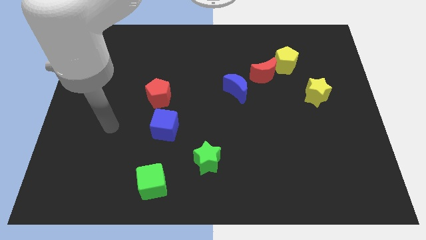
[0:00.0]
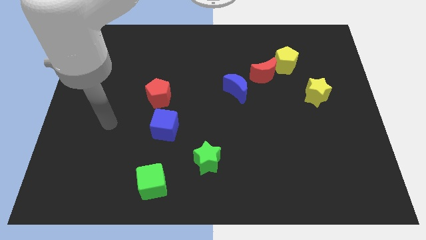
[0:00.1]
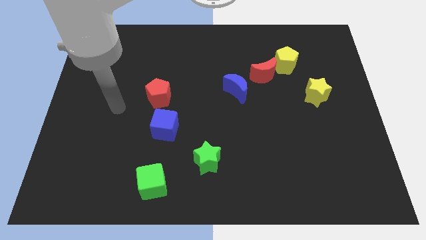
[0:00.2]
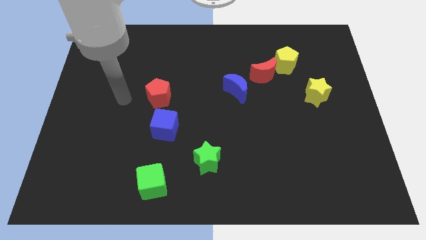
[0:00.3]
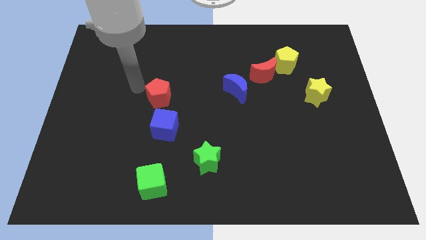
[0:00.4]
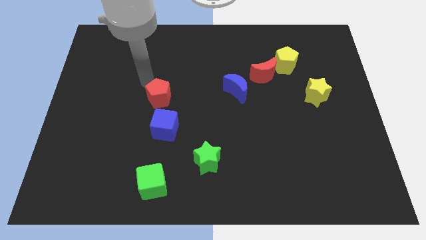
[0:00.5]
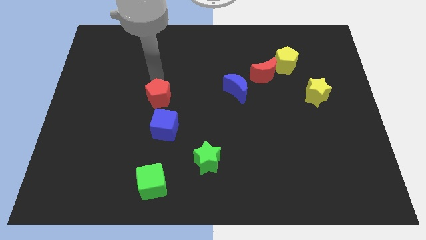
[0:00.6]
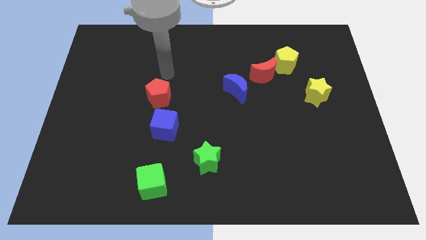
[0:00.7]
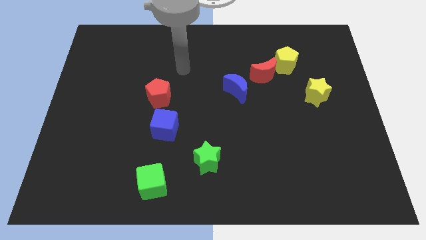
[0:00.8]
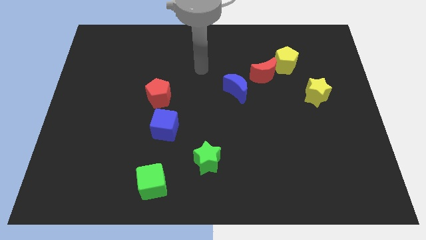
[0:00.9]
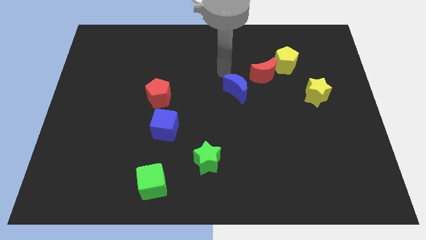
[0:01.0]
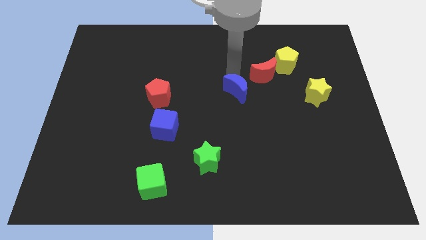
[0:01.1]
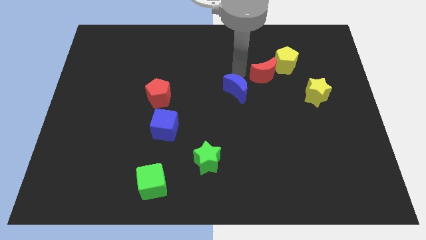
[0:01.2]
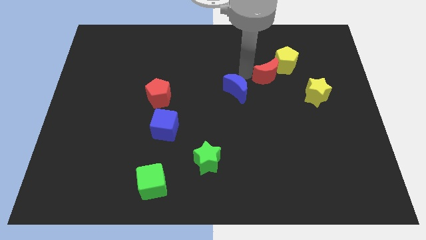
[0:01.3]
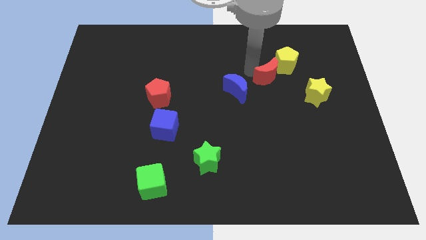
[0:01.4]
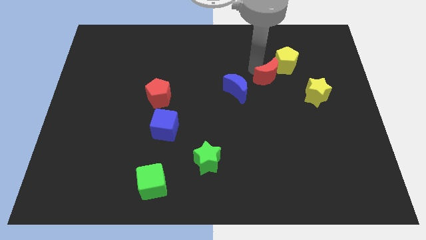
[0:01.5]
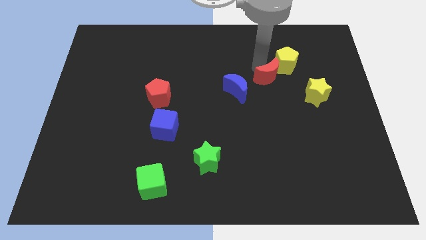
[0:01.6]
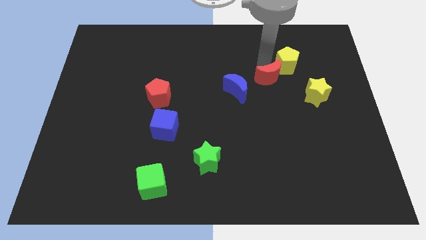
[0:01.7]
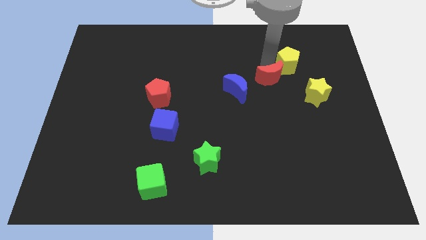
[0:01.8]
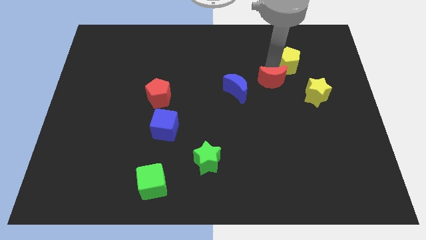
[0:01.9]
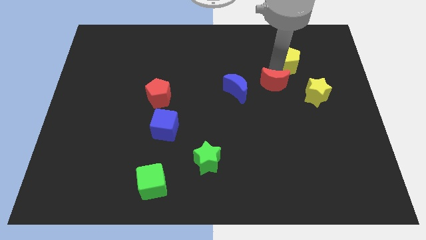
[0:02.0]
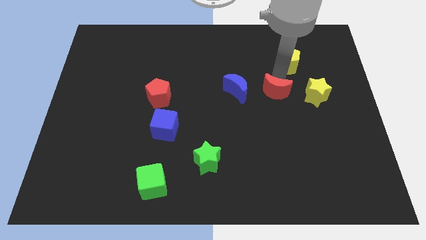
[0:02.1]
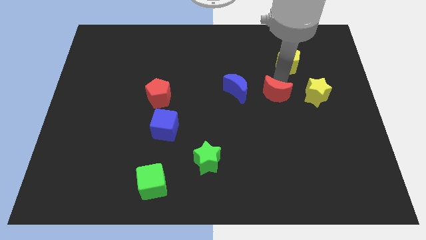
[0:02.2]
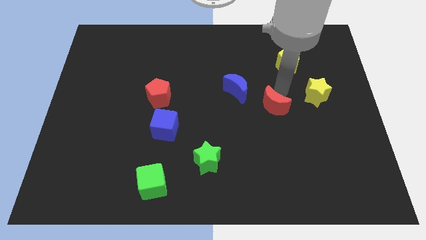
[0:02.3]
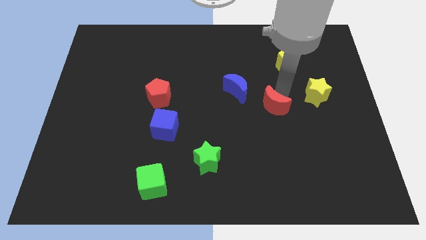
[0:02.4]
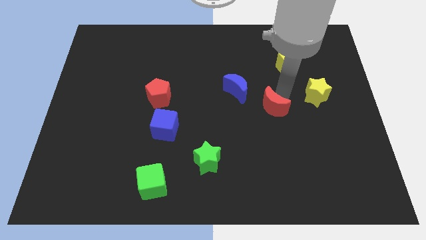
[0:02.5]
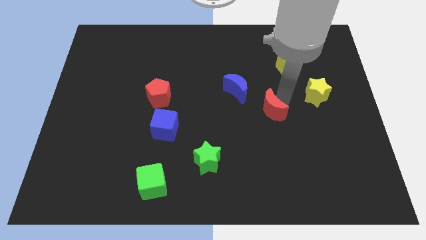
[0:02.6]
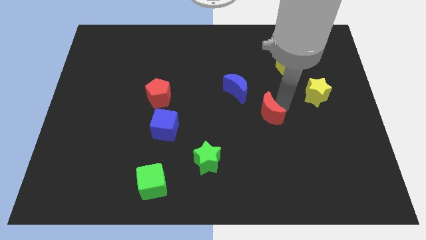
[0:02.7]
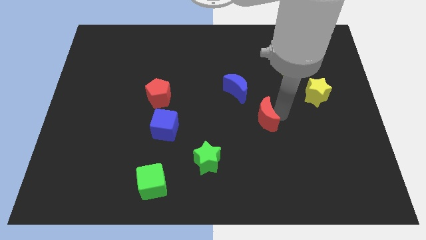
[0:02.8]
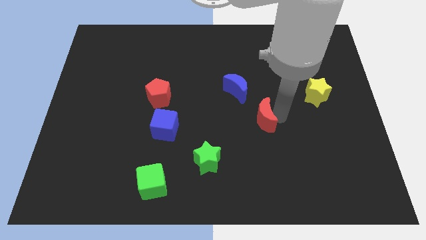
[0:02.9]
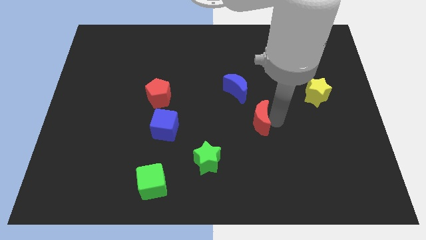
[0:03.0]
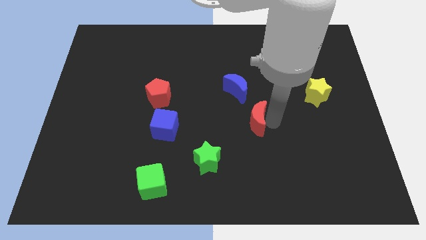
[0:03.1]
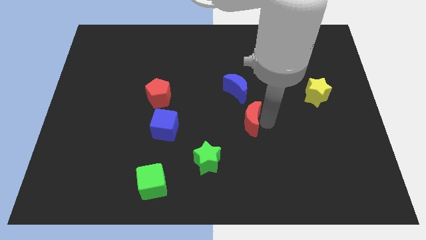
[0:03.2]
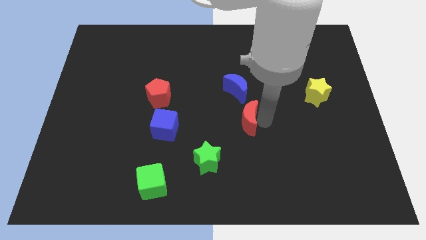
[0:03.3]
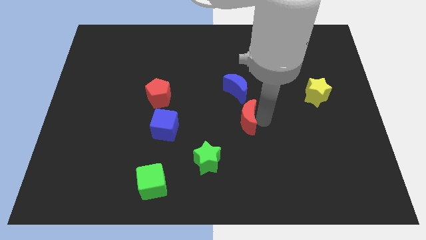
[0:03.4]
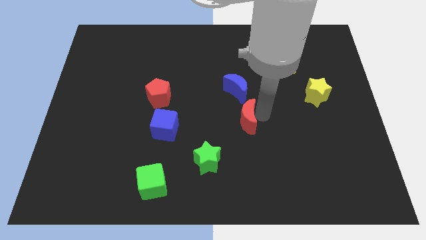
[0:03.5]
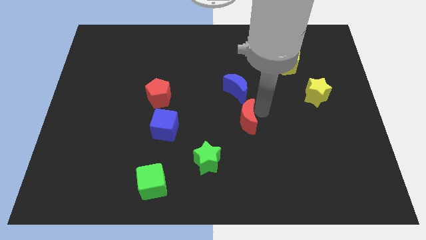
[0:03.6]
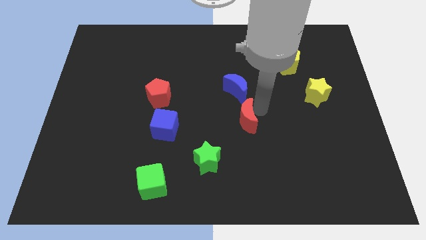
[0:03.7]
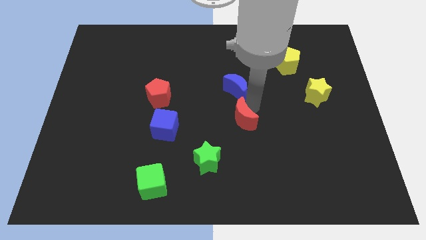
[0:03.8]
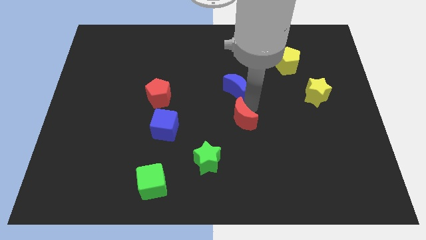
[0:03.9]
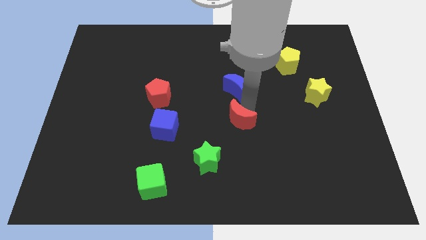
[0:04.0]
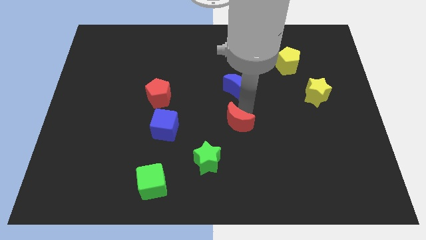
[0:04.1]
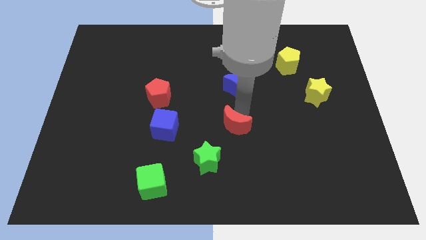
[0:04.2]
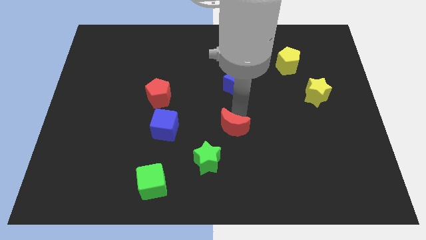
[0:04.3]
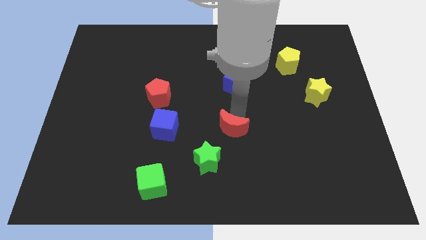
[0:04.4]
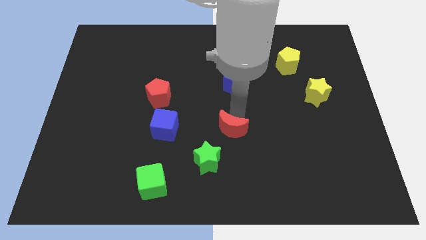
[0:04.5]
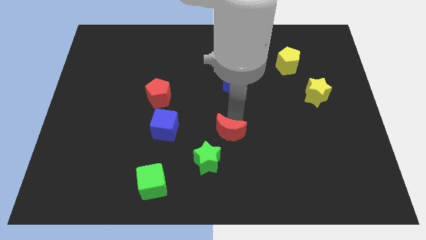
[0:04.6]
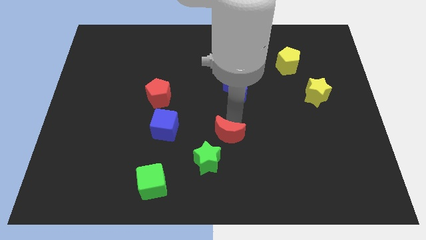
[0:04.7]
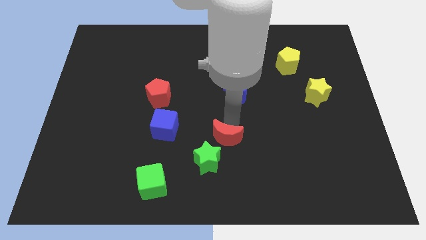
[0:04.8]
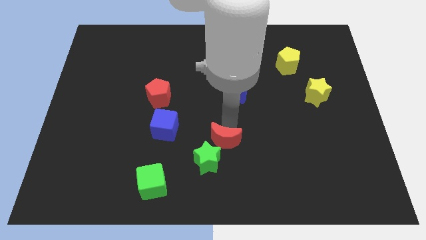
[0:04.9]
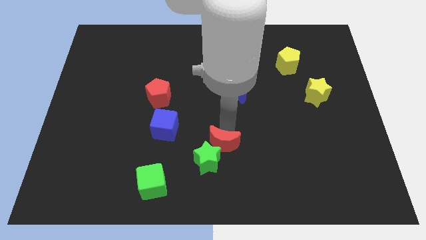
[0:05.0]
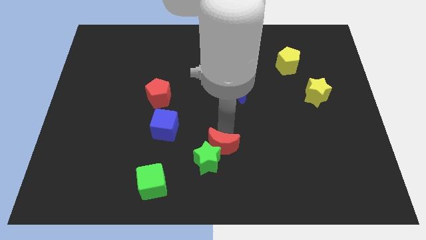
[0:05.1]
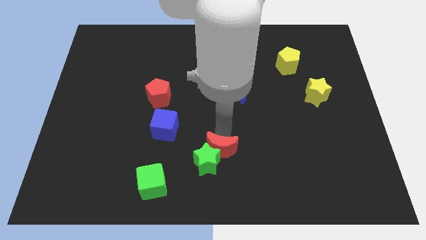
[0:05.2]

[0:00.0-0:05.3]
slide the red moon next to the green star

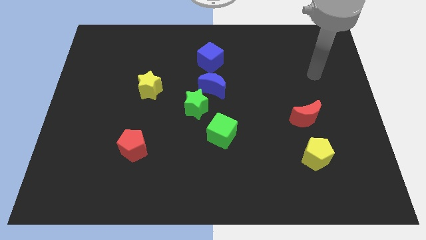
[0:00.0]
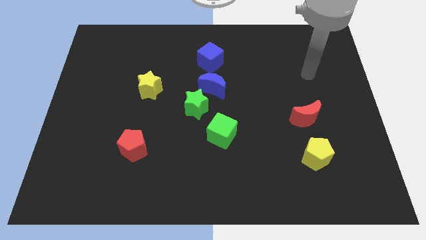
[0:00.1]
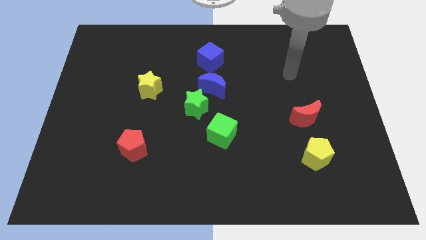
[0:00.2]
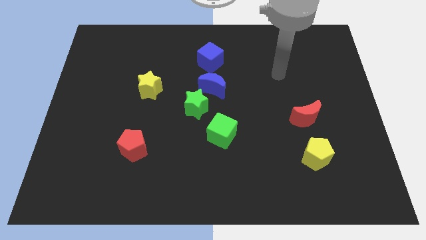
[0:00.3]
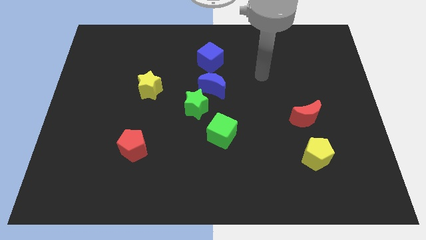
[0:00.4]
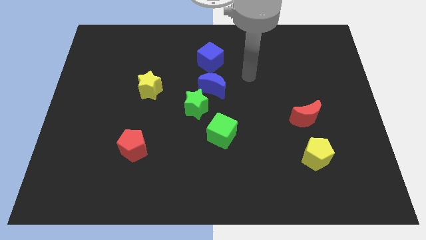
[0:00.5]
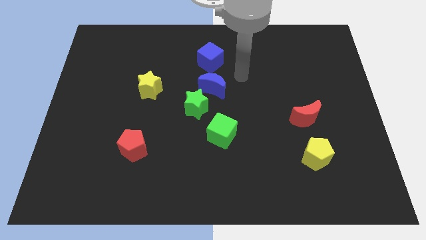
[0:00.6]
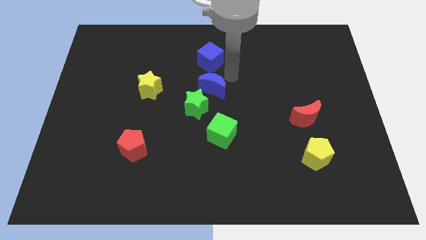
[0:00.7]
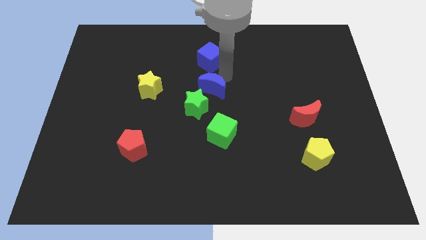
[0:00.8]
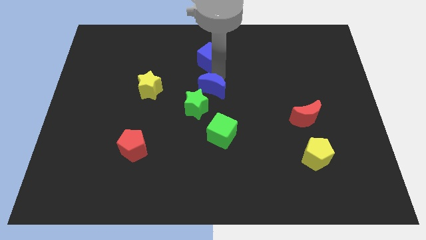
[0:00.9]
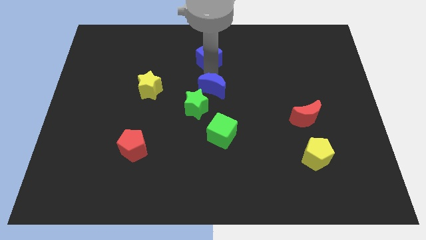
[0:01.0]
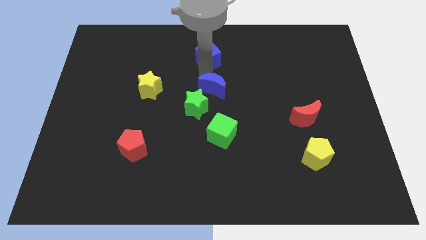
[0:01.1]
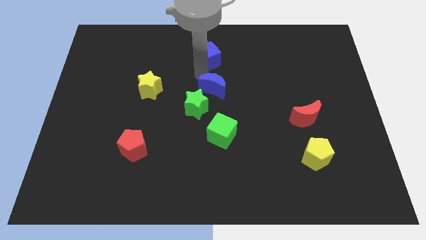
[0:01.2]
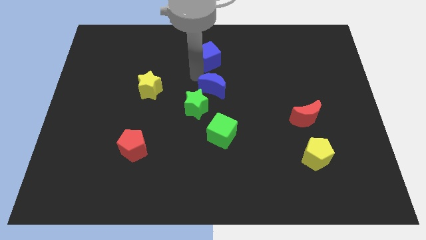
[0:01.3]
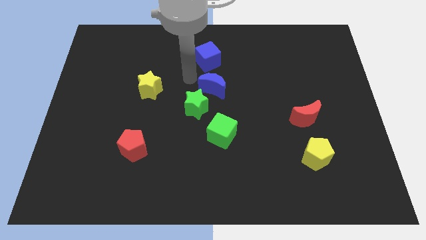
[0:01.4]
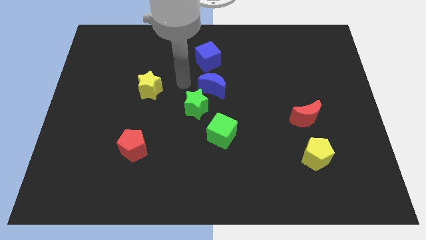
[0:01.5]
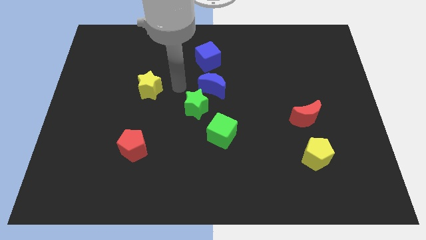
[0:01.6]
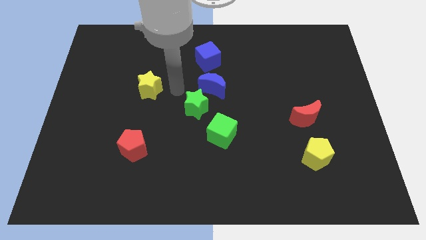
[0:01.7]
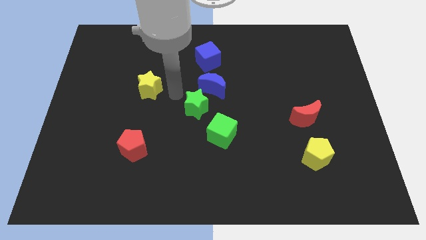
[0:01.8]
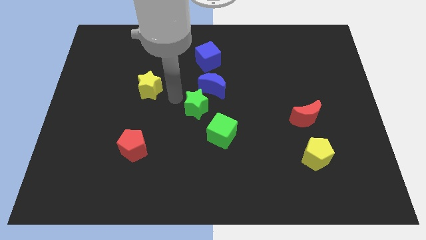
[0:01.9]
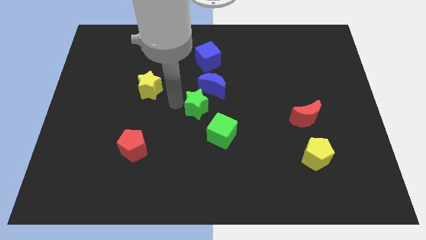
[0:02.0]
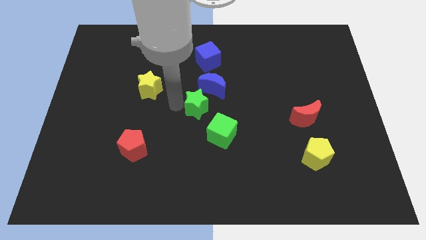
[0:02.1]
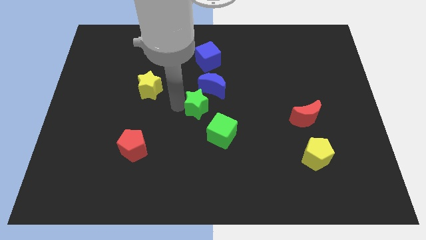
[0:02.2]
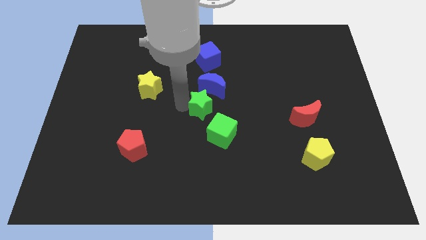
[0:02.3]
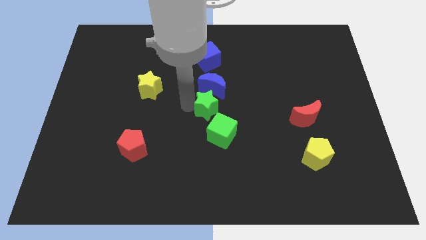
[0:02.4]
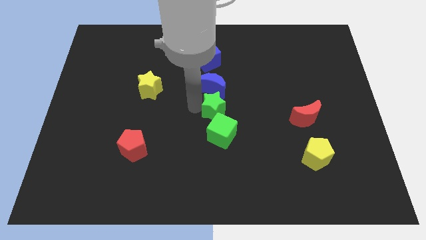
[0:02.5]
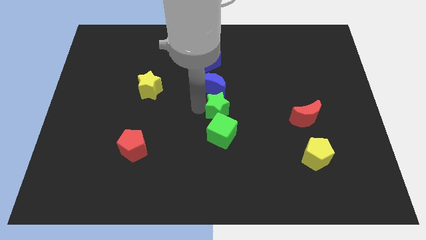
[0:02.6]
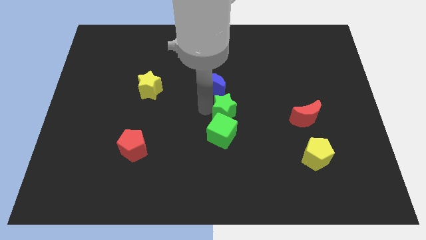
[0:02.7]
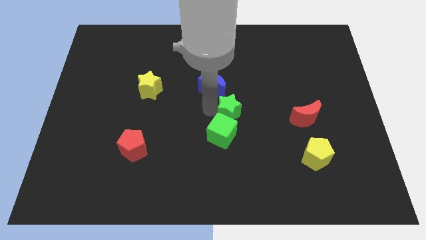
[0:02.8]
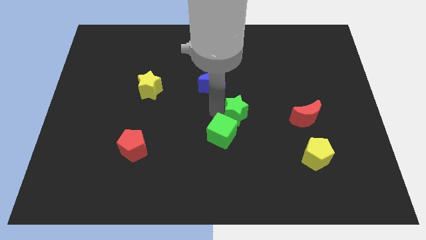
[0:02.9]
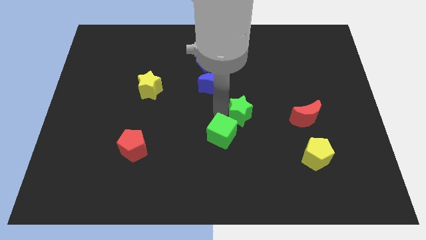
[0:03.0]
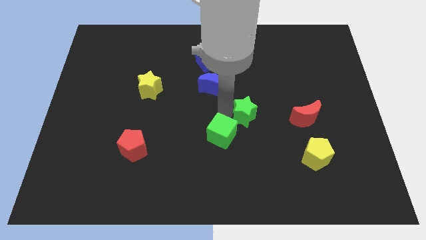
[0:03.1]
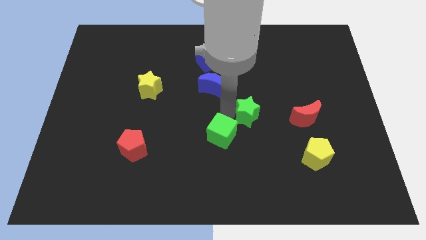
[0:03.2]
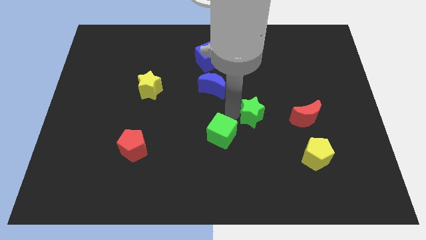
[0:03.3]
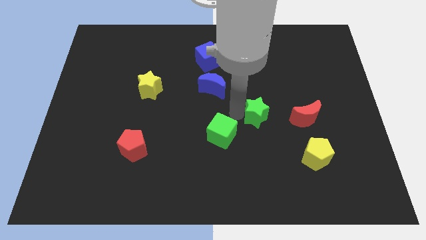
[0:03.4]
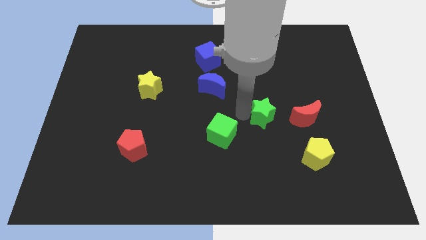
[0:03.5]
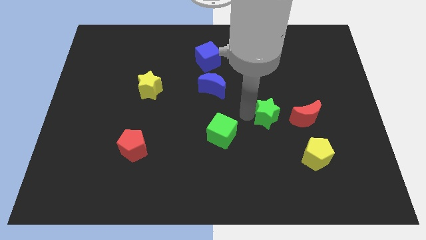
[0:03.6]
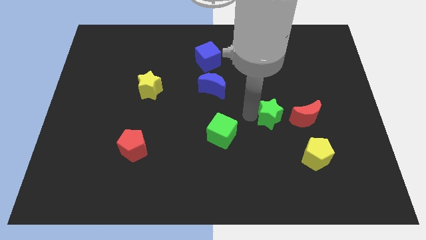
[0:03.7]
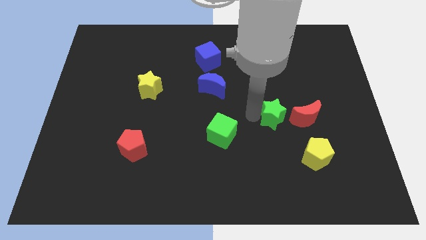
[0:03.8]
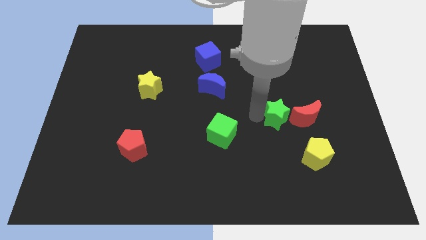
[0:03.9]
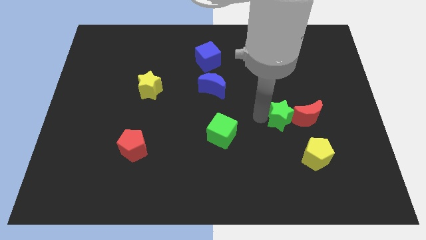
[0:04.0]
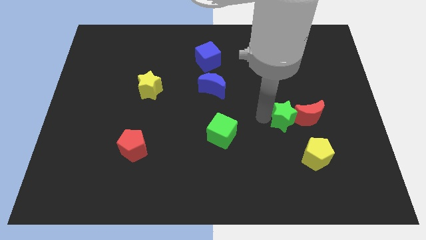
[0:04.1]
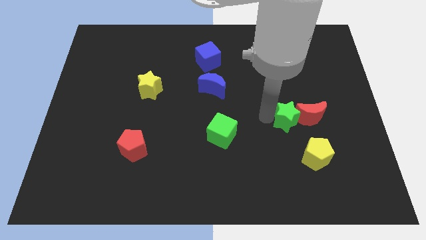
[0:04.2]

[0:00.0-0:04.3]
put the green star to the red moon
